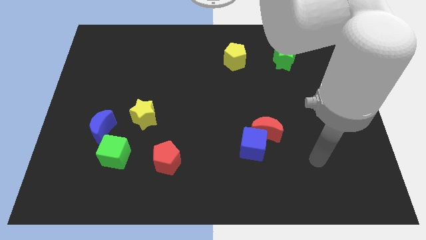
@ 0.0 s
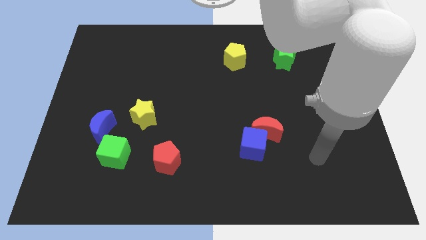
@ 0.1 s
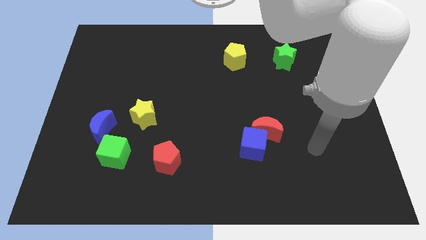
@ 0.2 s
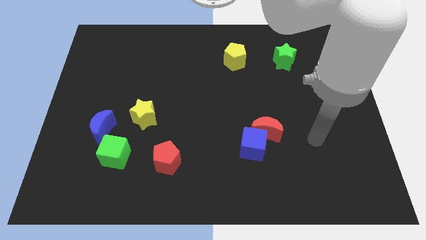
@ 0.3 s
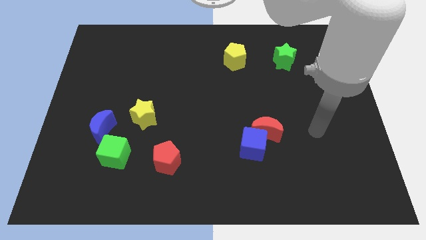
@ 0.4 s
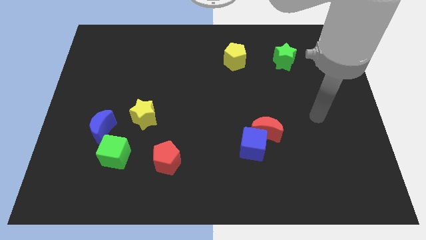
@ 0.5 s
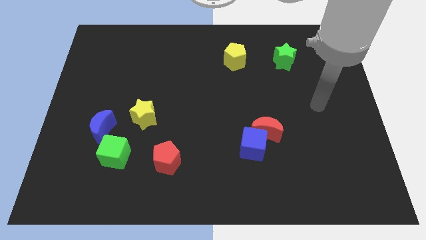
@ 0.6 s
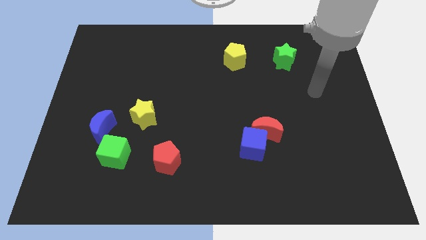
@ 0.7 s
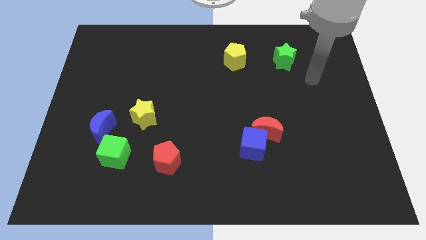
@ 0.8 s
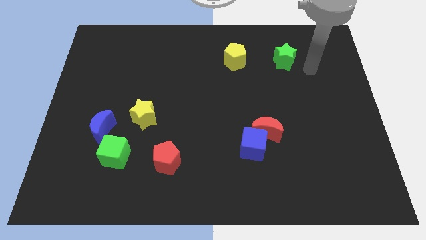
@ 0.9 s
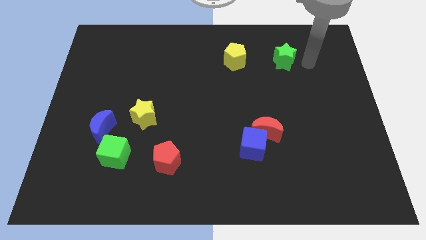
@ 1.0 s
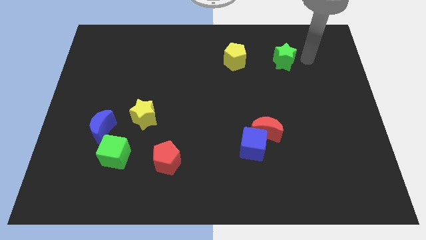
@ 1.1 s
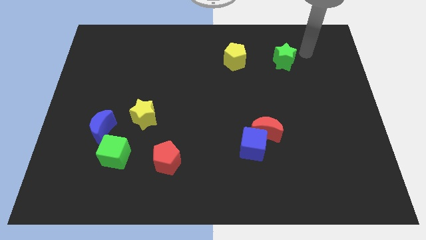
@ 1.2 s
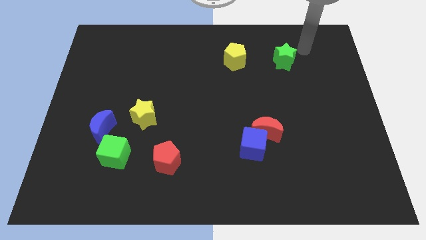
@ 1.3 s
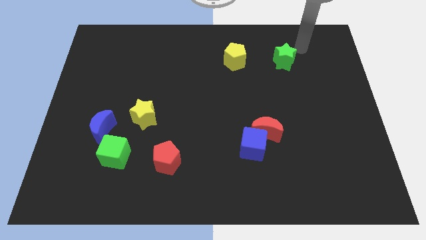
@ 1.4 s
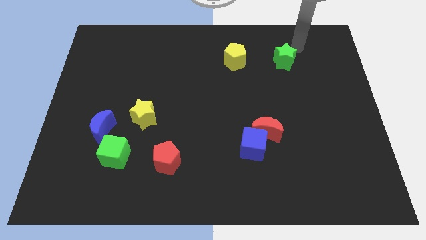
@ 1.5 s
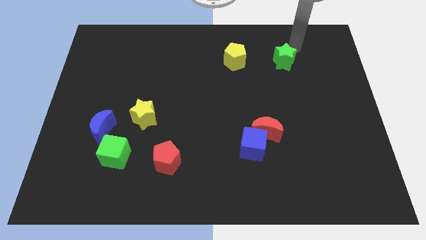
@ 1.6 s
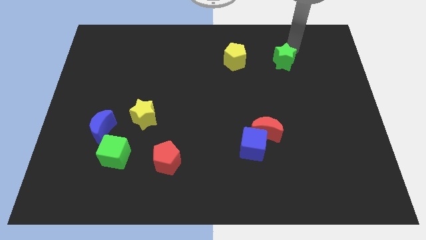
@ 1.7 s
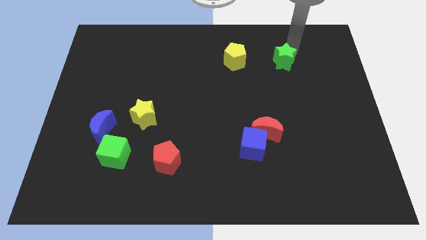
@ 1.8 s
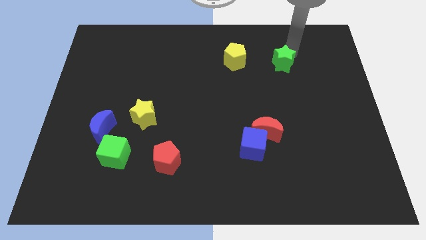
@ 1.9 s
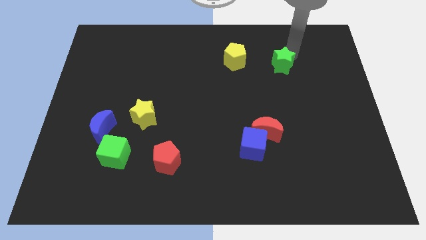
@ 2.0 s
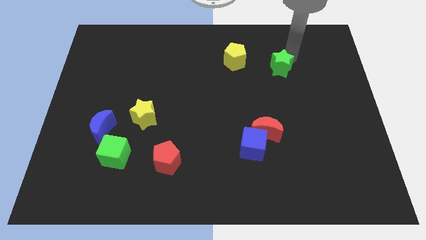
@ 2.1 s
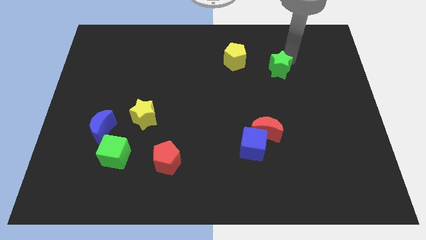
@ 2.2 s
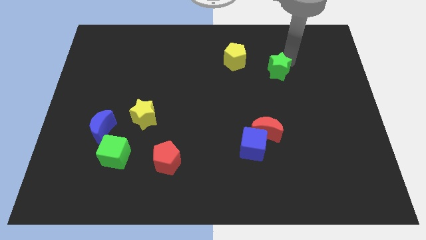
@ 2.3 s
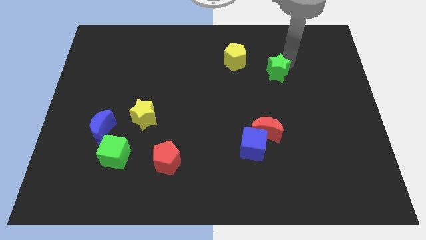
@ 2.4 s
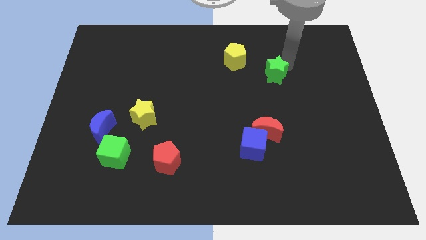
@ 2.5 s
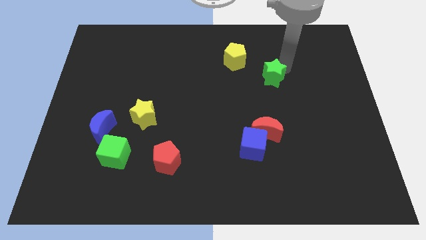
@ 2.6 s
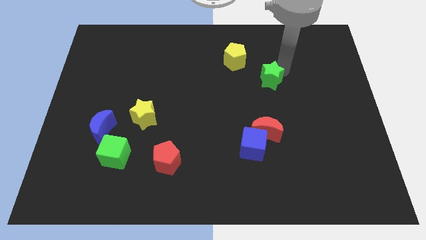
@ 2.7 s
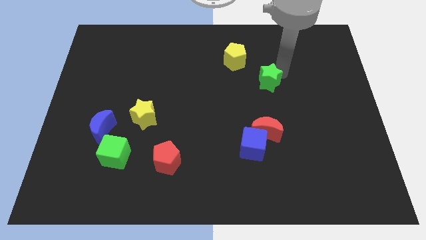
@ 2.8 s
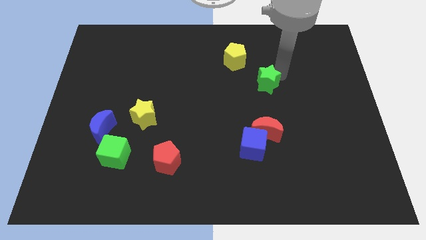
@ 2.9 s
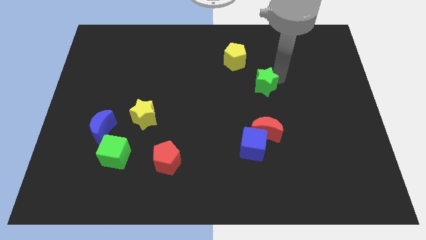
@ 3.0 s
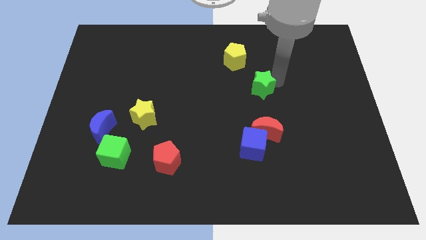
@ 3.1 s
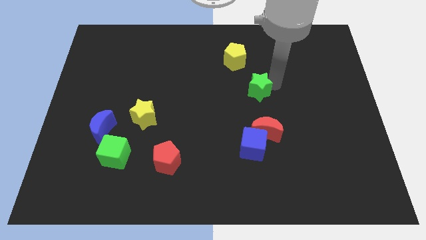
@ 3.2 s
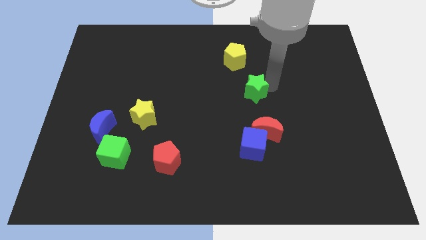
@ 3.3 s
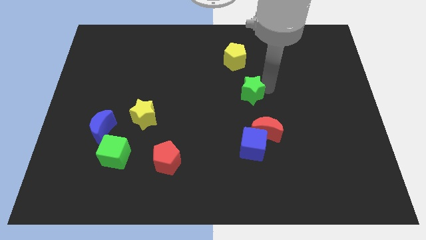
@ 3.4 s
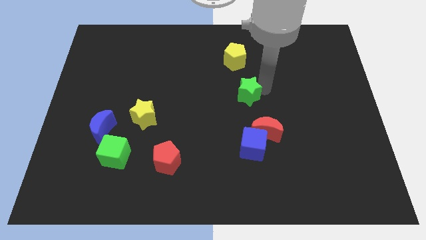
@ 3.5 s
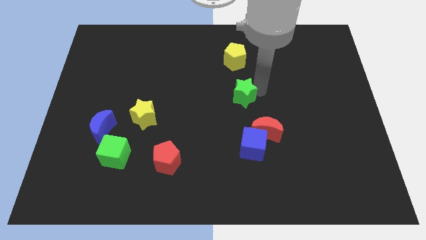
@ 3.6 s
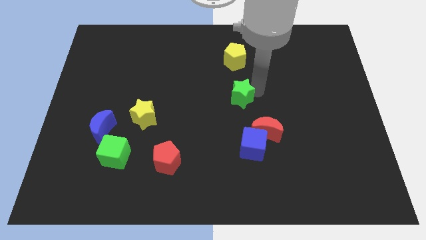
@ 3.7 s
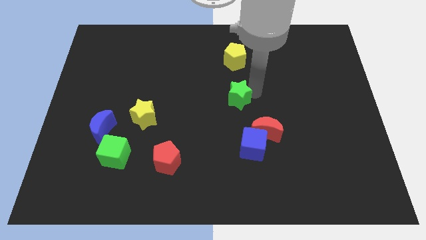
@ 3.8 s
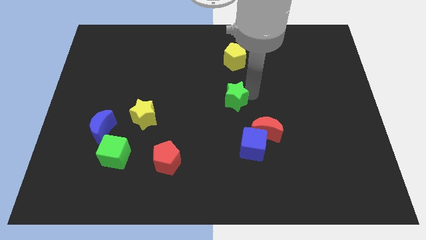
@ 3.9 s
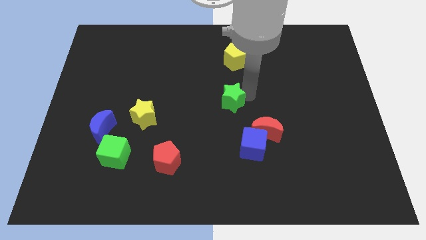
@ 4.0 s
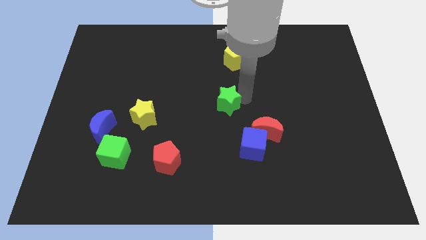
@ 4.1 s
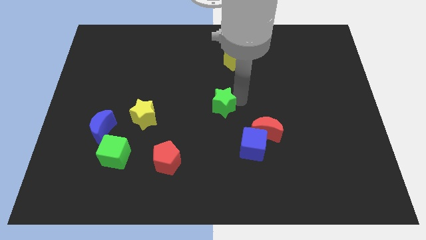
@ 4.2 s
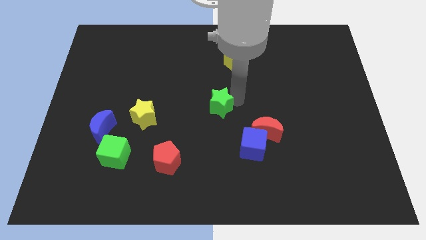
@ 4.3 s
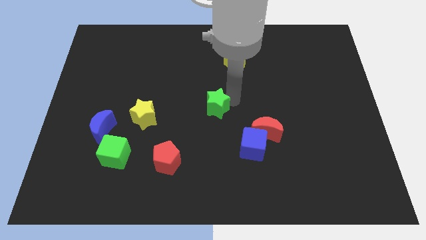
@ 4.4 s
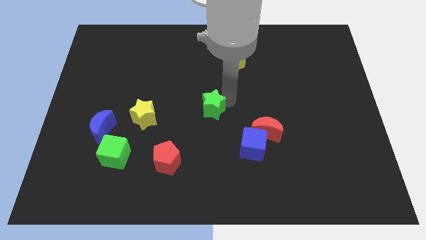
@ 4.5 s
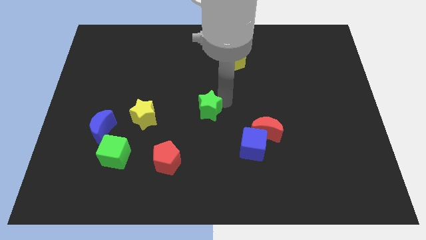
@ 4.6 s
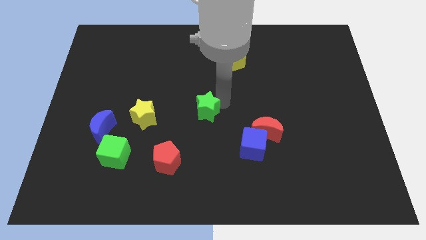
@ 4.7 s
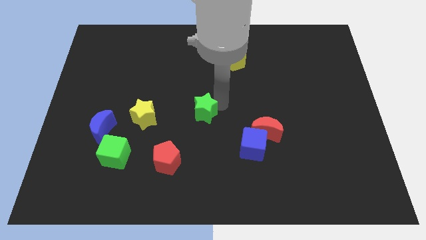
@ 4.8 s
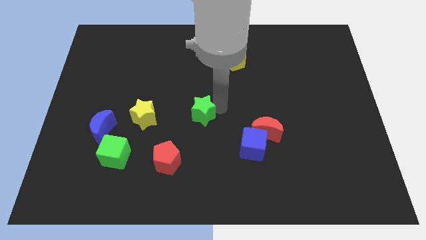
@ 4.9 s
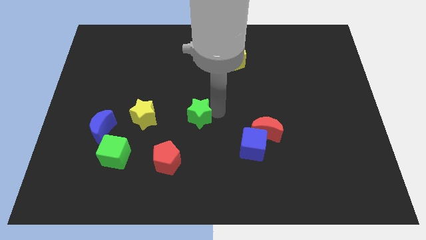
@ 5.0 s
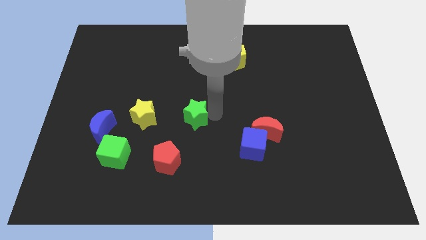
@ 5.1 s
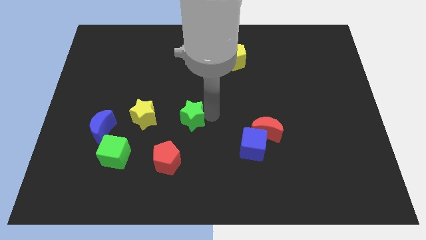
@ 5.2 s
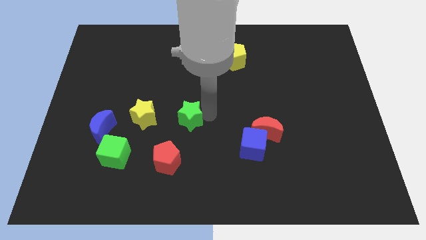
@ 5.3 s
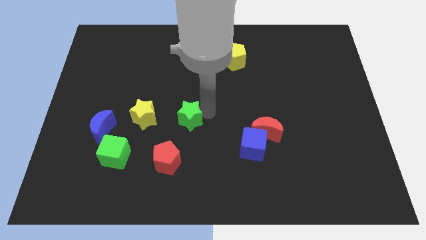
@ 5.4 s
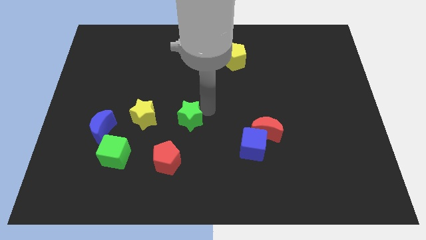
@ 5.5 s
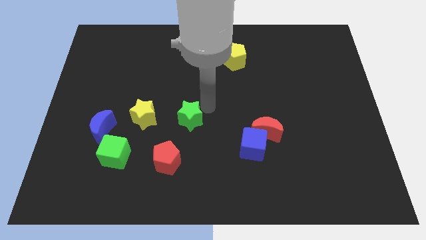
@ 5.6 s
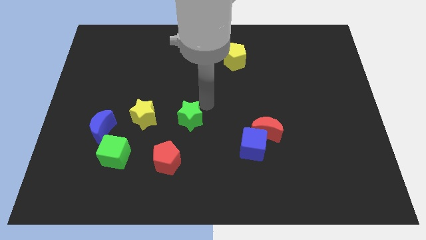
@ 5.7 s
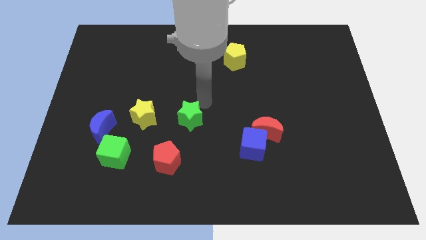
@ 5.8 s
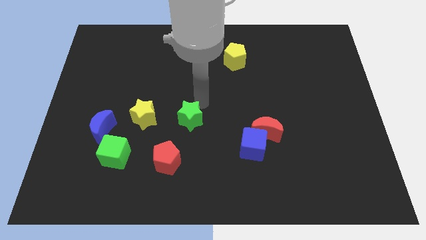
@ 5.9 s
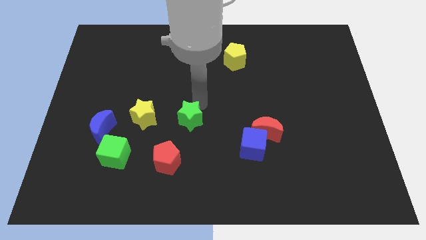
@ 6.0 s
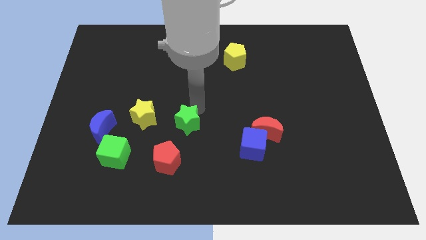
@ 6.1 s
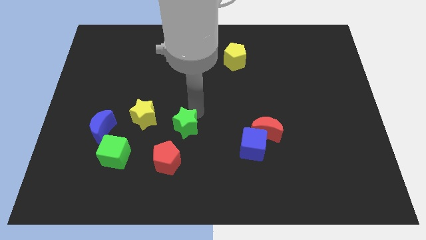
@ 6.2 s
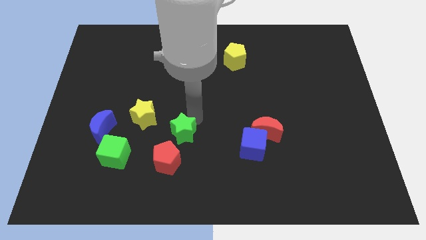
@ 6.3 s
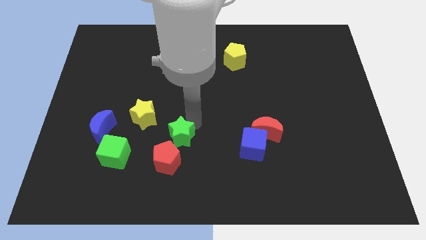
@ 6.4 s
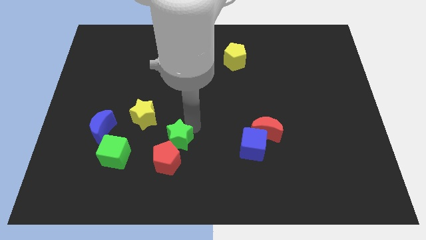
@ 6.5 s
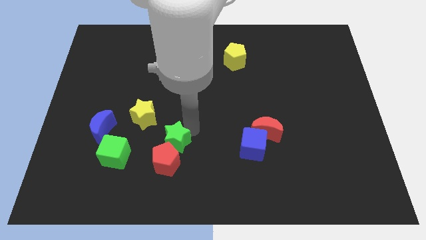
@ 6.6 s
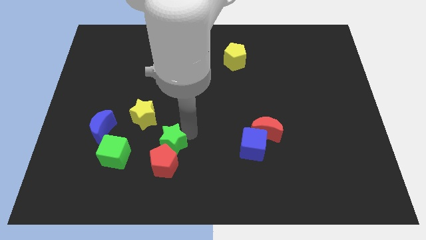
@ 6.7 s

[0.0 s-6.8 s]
put the green star next to the red pentagon

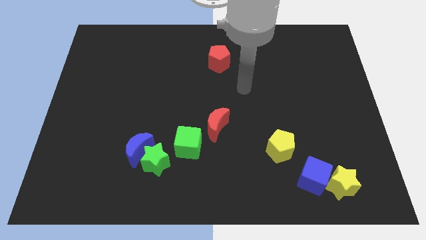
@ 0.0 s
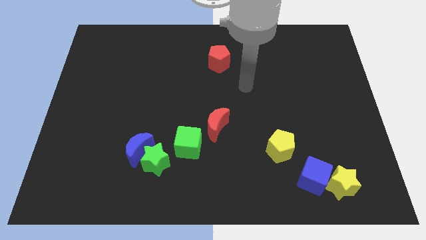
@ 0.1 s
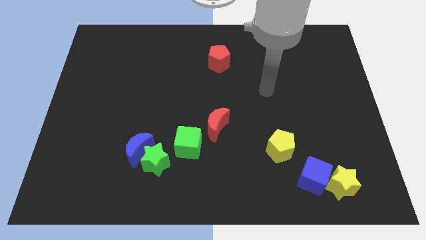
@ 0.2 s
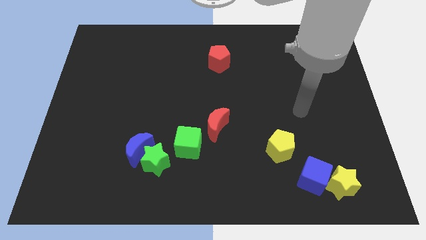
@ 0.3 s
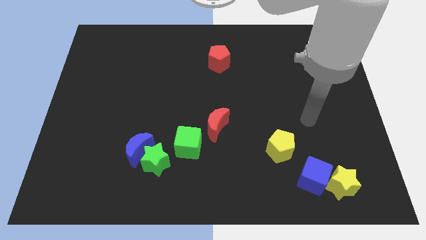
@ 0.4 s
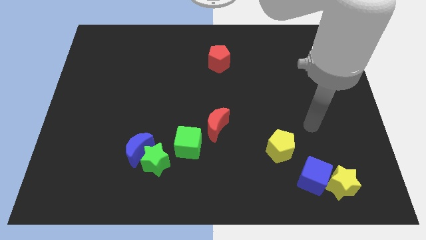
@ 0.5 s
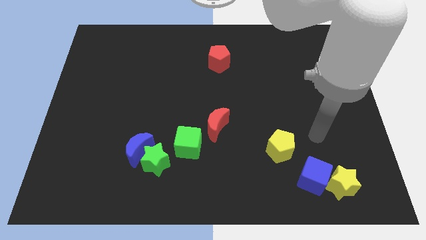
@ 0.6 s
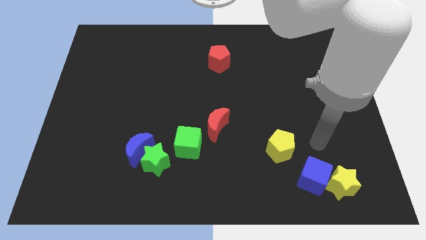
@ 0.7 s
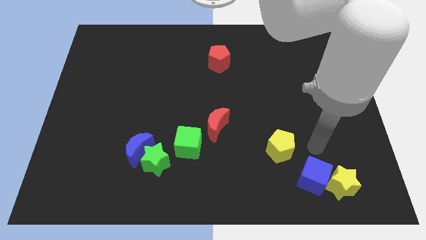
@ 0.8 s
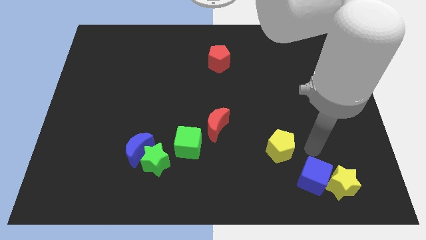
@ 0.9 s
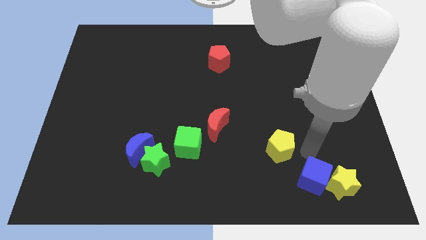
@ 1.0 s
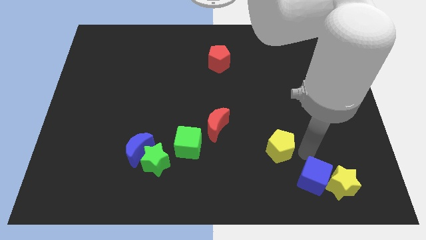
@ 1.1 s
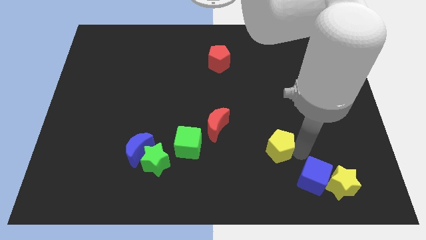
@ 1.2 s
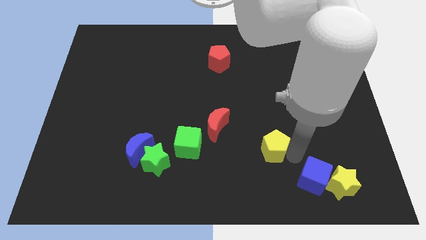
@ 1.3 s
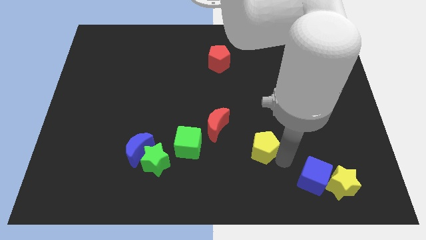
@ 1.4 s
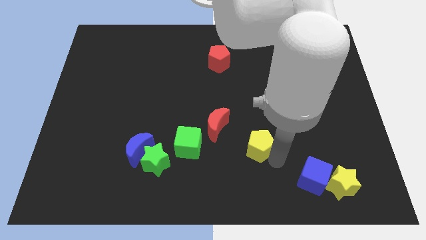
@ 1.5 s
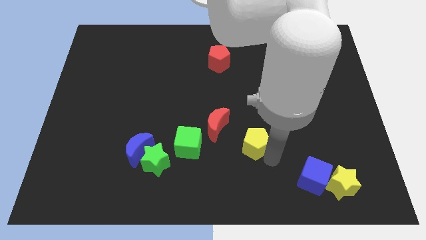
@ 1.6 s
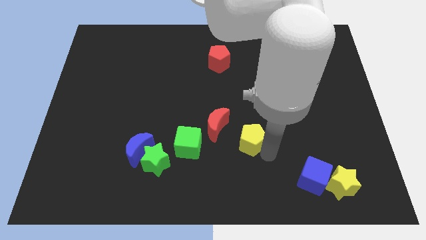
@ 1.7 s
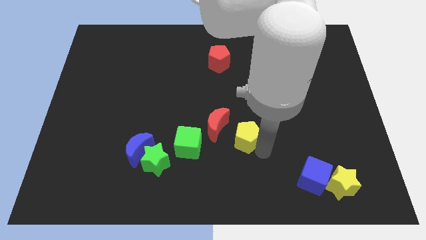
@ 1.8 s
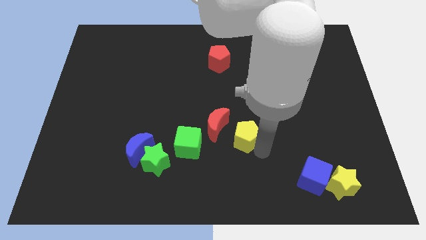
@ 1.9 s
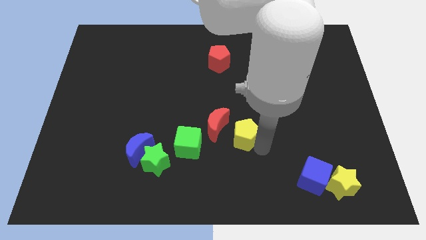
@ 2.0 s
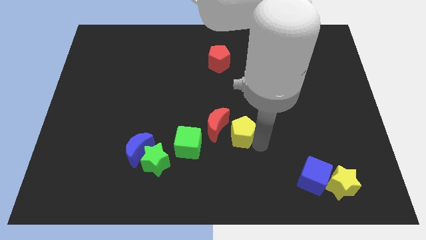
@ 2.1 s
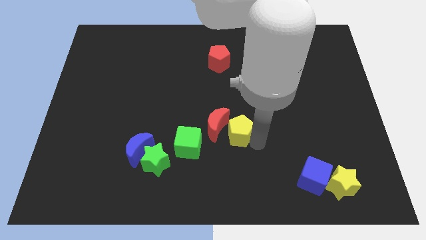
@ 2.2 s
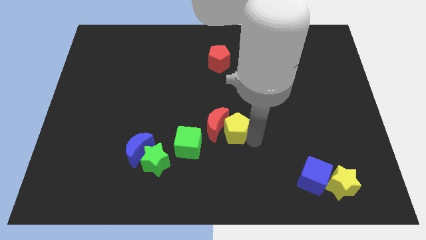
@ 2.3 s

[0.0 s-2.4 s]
slide the yellow pentagon to the red moon

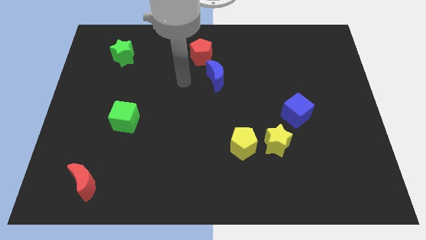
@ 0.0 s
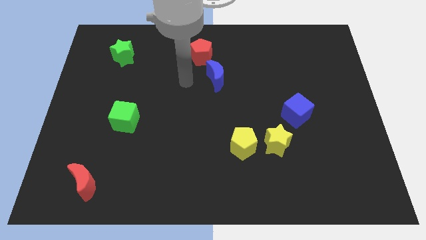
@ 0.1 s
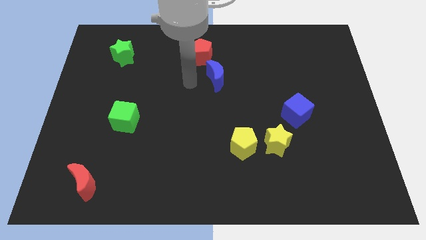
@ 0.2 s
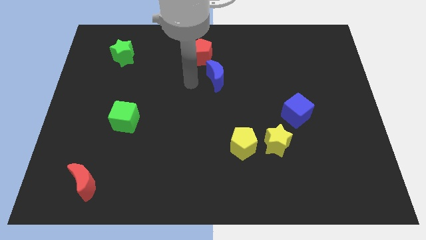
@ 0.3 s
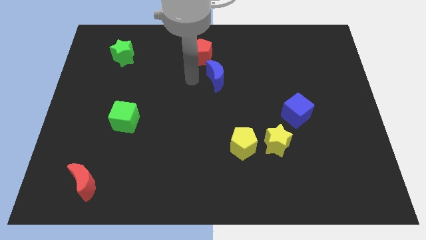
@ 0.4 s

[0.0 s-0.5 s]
put the green star to the yellow star
